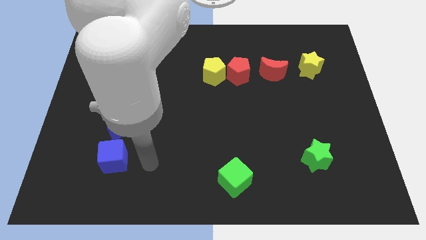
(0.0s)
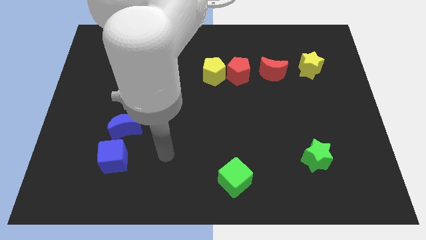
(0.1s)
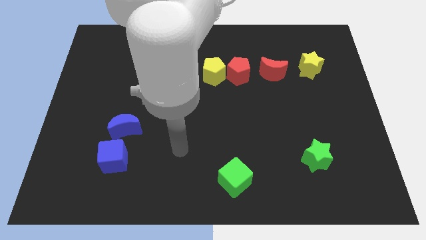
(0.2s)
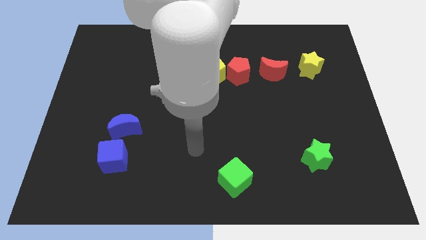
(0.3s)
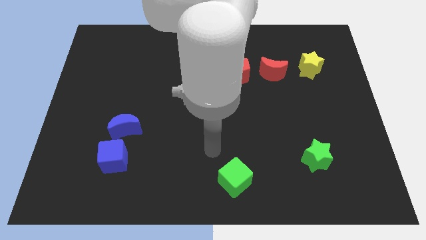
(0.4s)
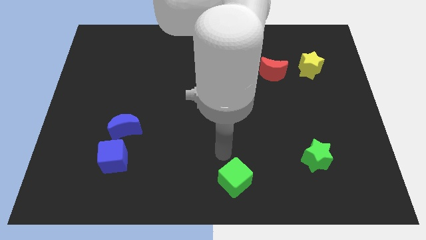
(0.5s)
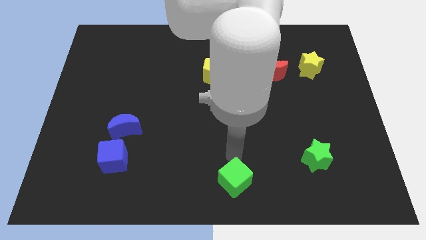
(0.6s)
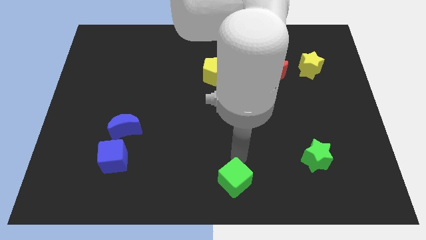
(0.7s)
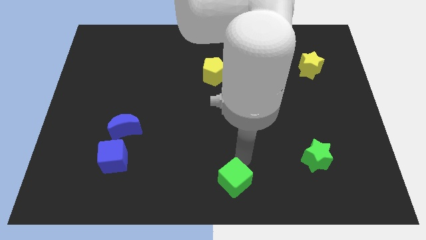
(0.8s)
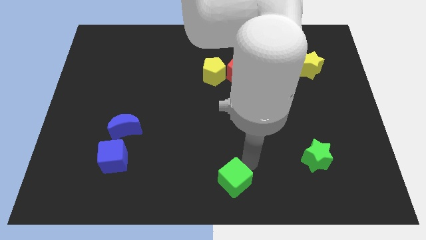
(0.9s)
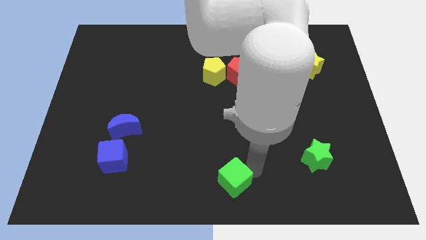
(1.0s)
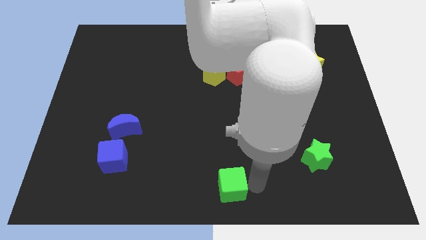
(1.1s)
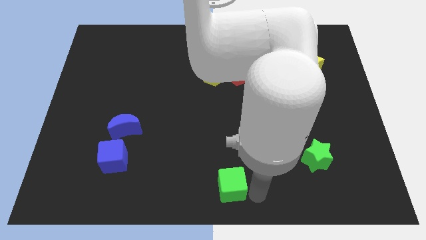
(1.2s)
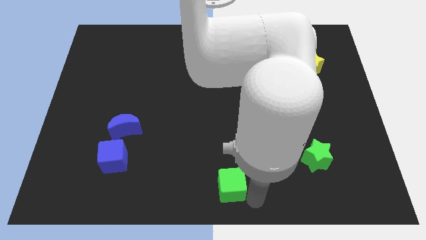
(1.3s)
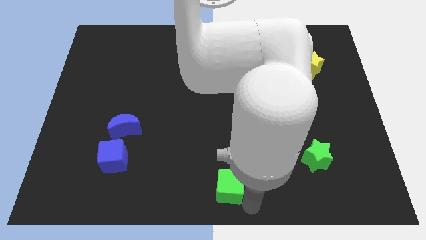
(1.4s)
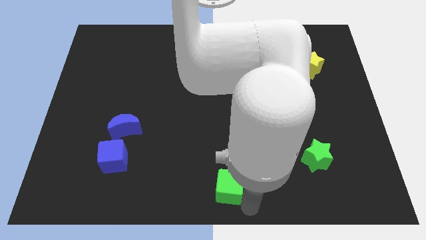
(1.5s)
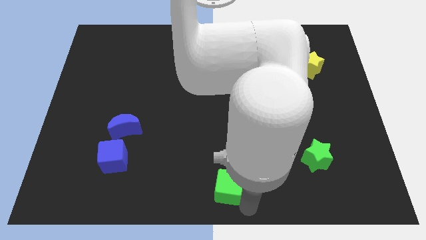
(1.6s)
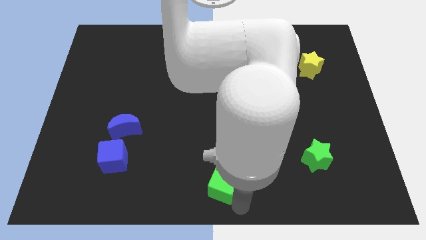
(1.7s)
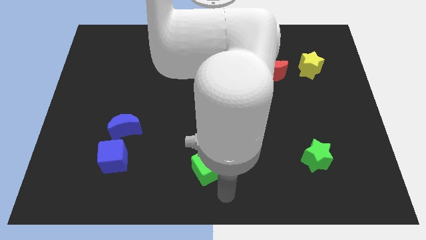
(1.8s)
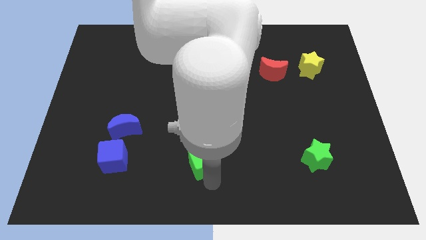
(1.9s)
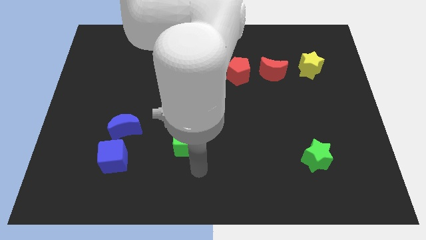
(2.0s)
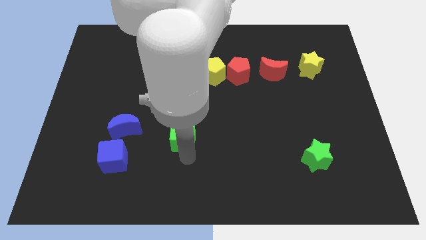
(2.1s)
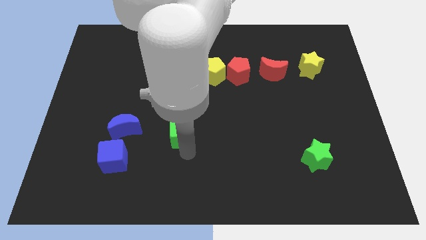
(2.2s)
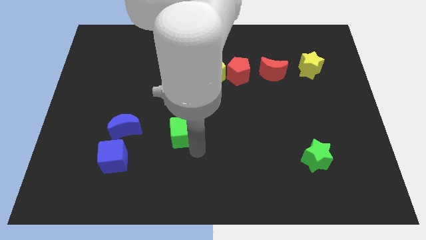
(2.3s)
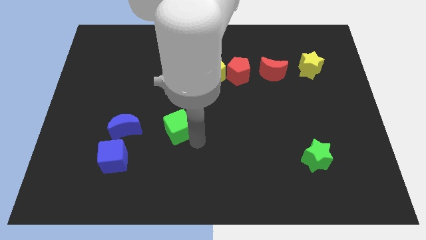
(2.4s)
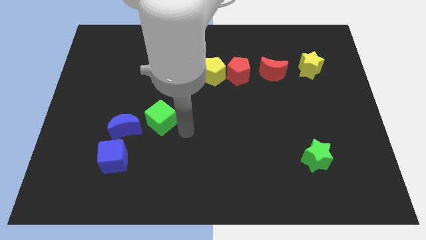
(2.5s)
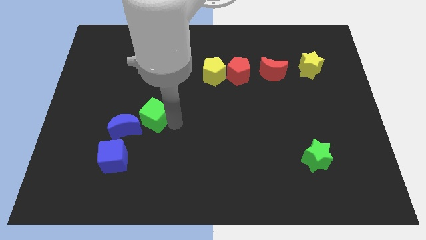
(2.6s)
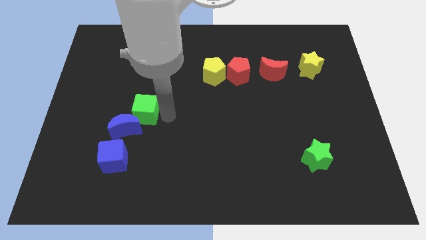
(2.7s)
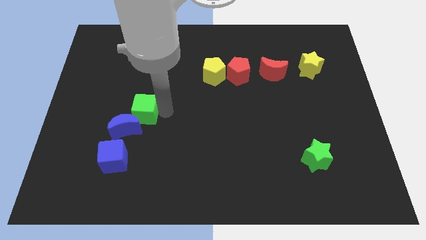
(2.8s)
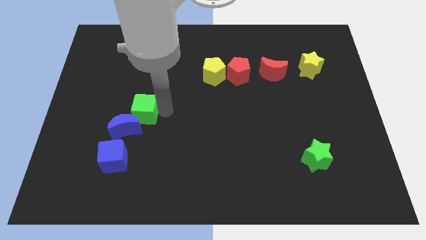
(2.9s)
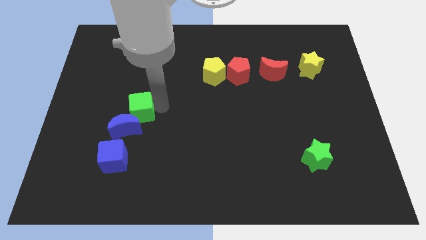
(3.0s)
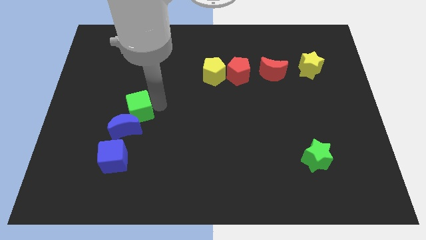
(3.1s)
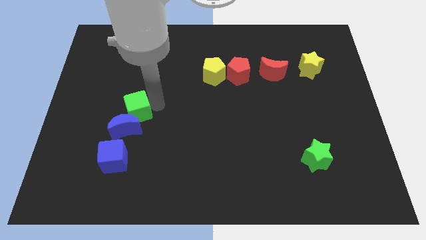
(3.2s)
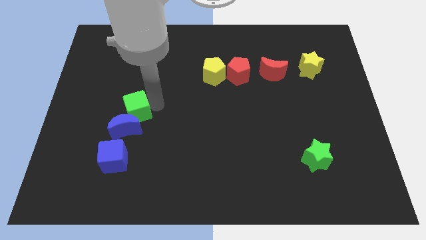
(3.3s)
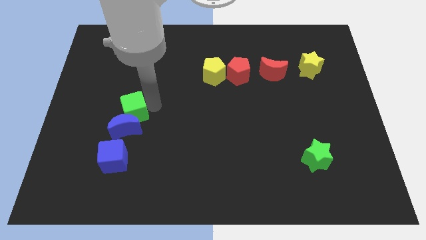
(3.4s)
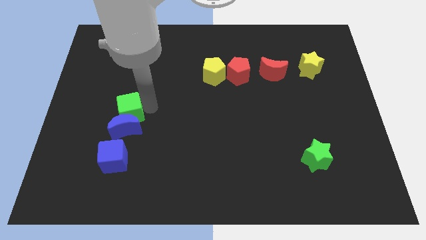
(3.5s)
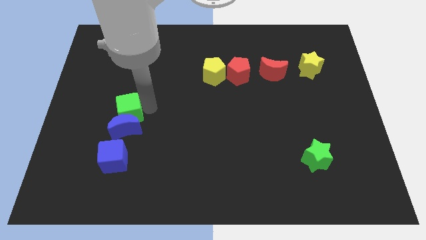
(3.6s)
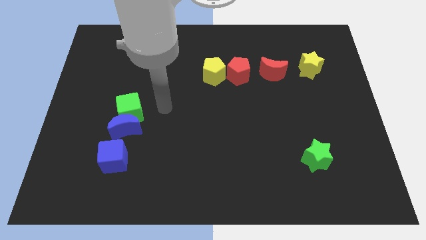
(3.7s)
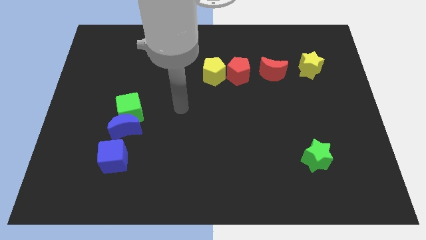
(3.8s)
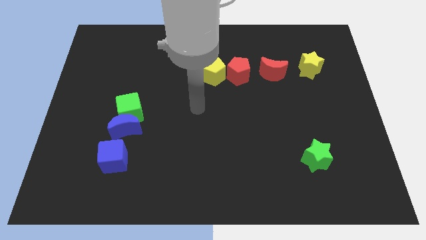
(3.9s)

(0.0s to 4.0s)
push the green cube to the top of the blue crescent

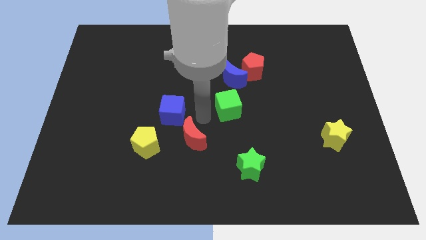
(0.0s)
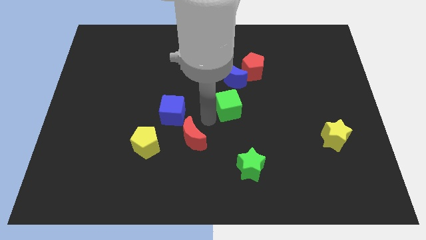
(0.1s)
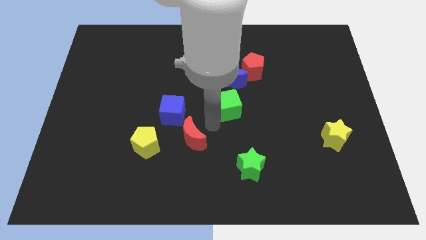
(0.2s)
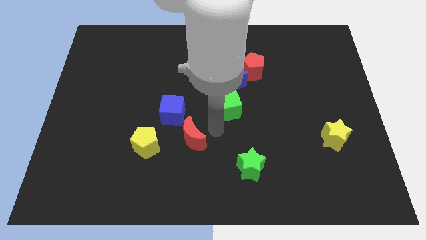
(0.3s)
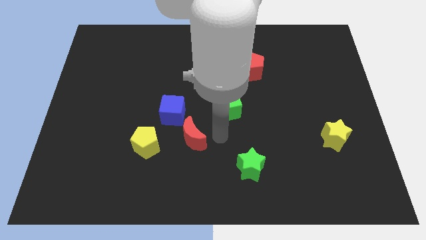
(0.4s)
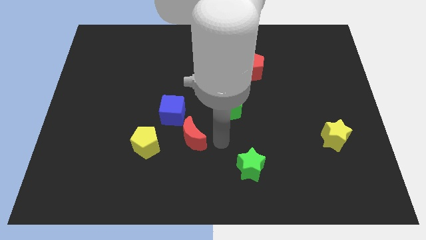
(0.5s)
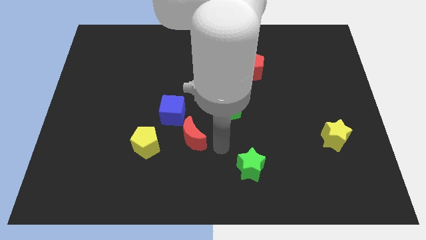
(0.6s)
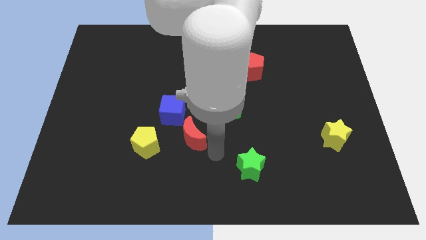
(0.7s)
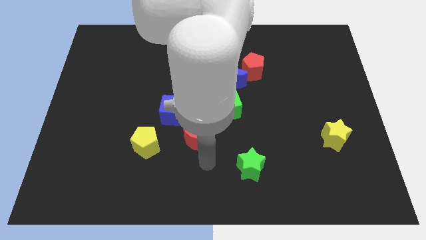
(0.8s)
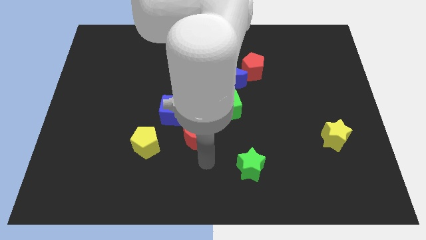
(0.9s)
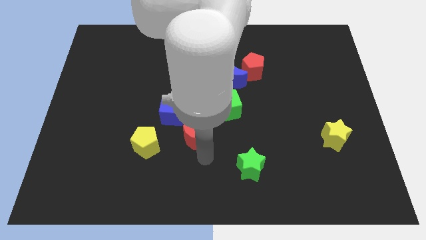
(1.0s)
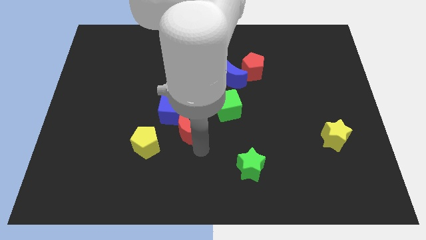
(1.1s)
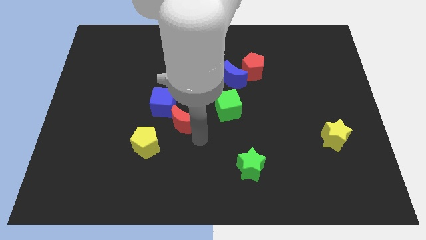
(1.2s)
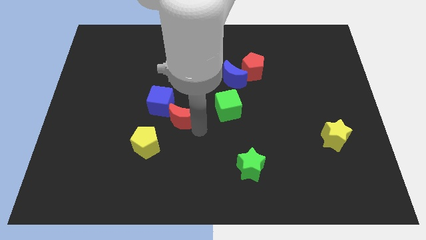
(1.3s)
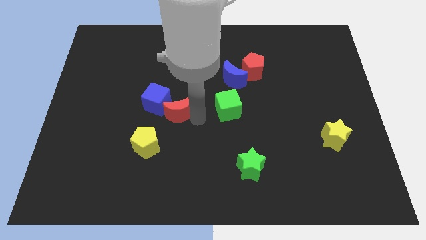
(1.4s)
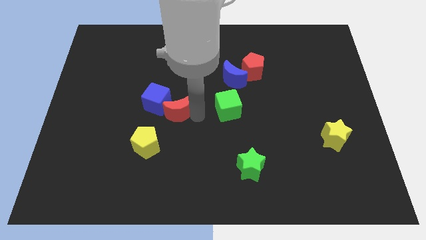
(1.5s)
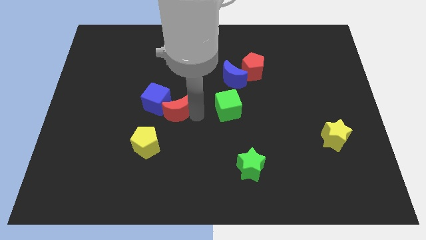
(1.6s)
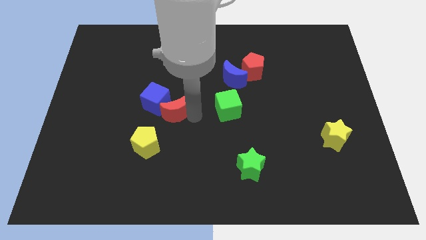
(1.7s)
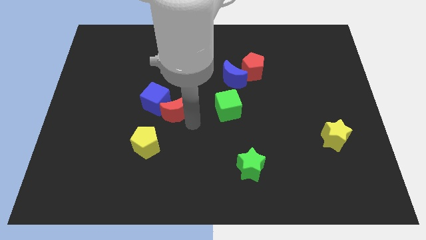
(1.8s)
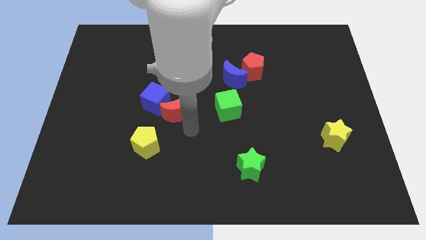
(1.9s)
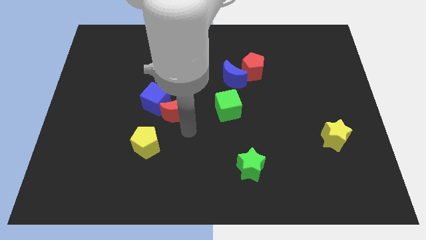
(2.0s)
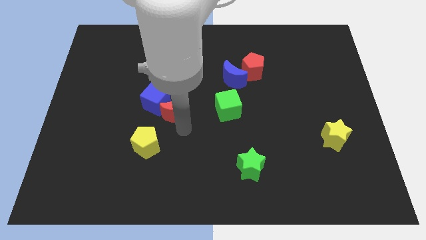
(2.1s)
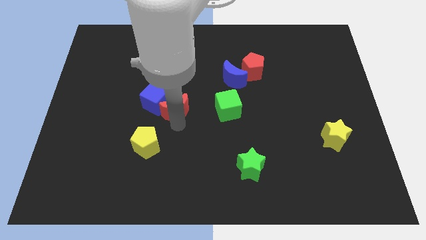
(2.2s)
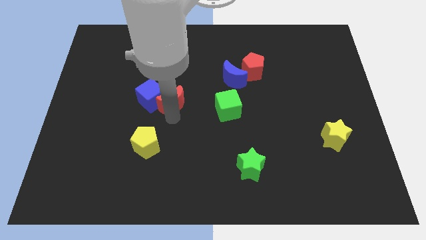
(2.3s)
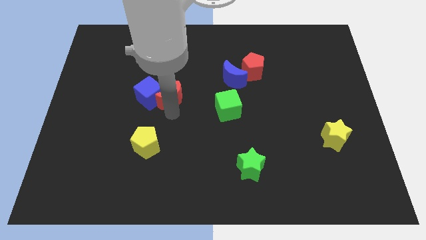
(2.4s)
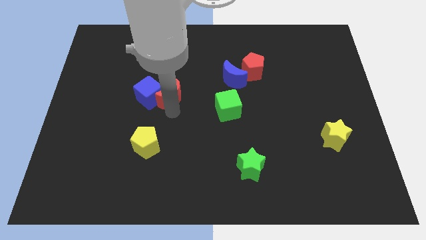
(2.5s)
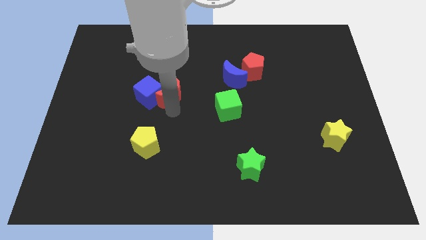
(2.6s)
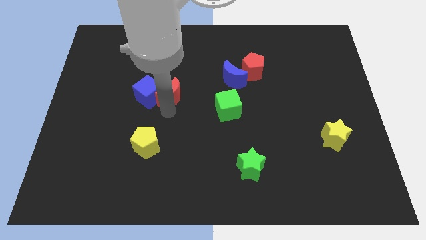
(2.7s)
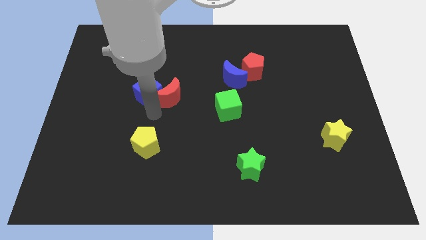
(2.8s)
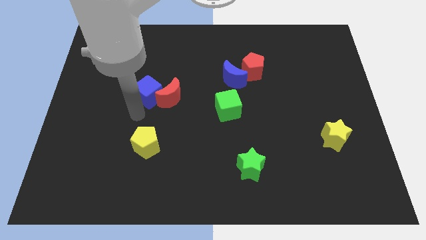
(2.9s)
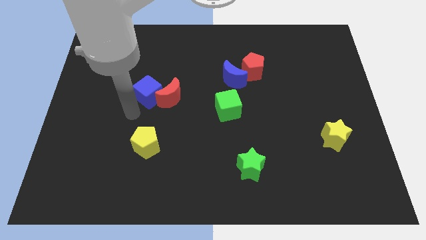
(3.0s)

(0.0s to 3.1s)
push red moon into the blue cube

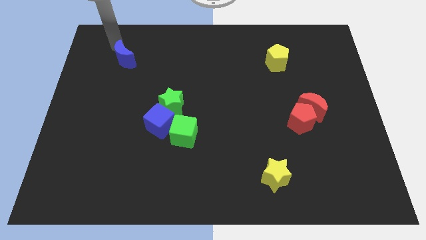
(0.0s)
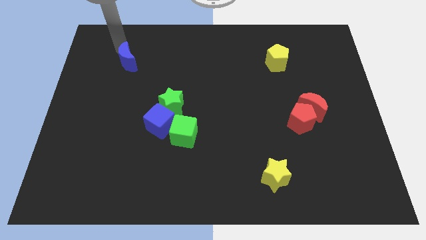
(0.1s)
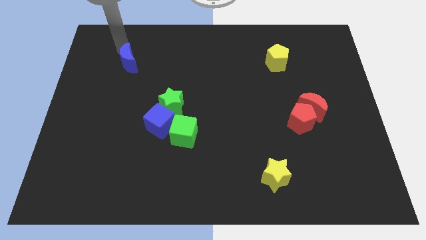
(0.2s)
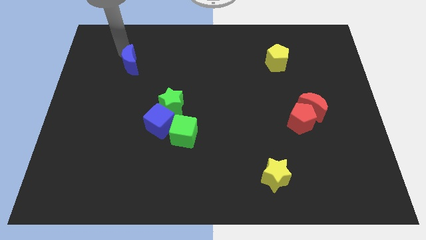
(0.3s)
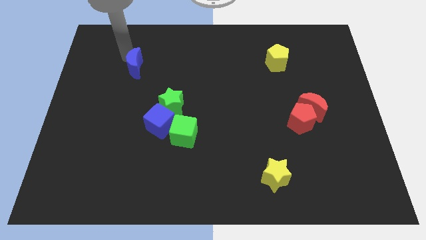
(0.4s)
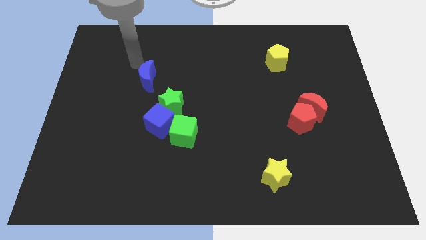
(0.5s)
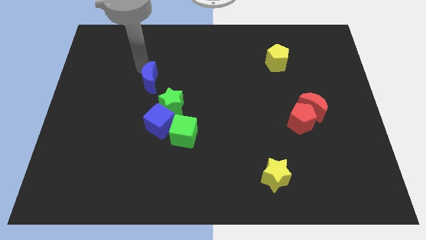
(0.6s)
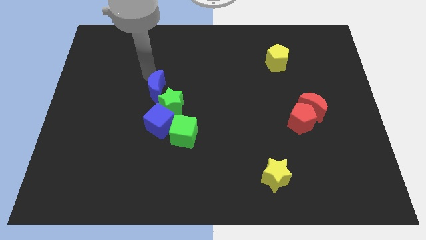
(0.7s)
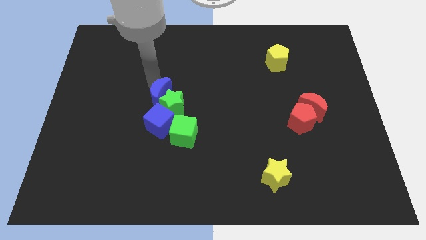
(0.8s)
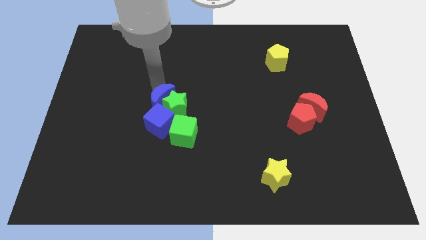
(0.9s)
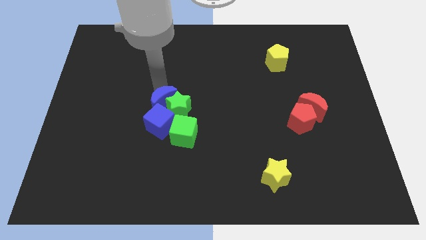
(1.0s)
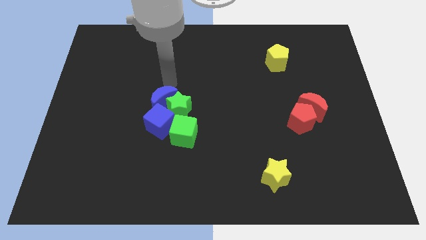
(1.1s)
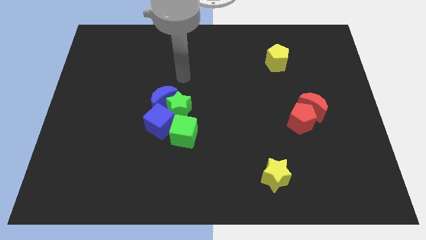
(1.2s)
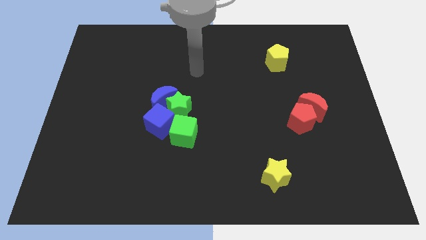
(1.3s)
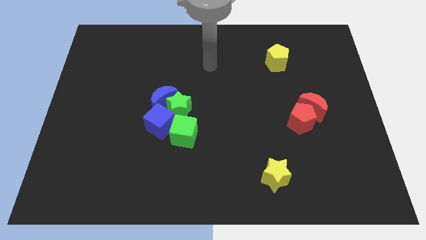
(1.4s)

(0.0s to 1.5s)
add the blue crescent to the group of both green blocks and blue cube

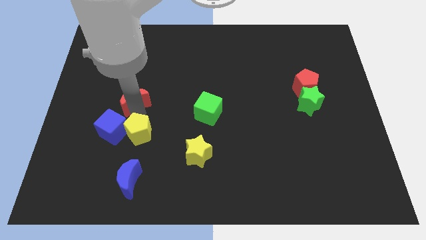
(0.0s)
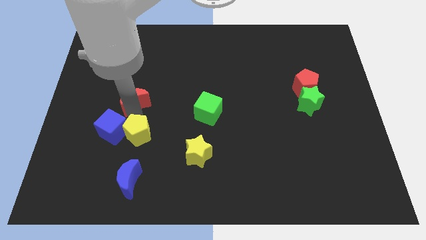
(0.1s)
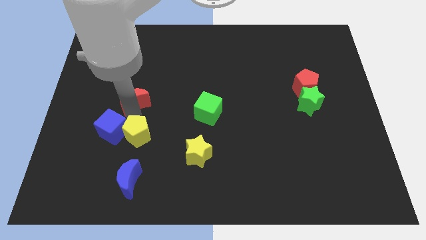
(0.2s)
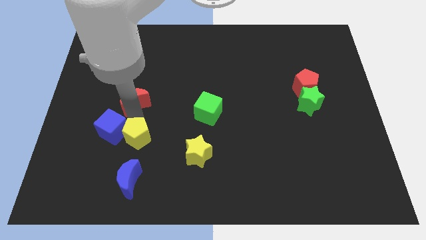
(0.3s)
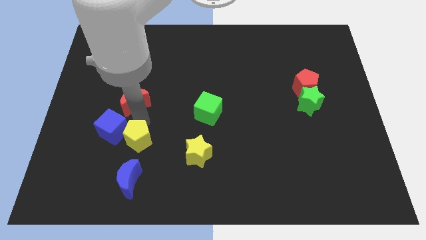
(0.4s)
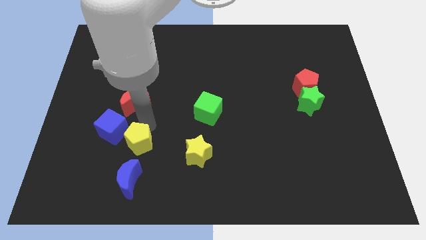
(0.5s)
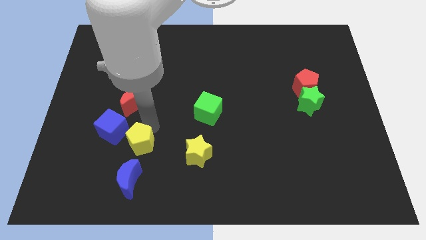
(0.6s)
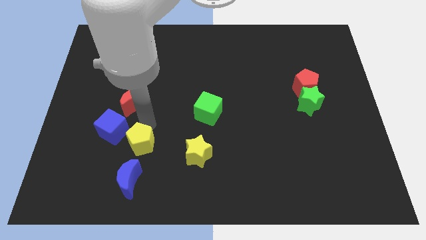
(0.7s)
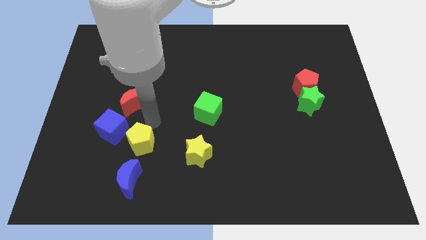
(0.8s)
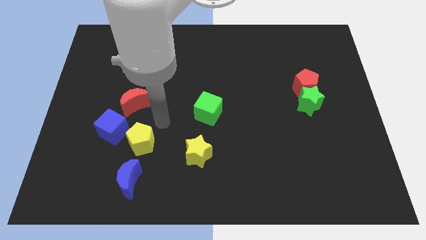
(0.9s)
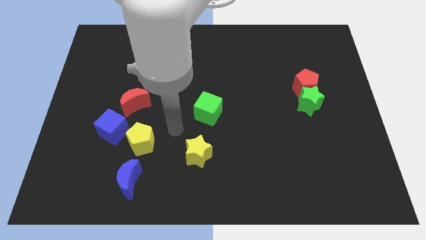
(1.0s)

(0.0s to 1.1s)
push yellow pentagon near blue moon
